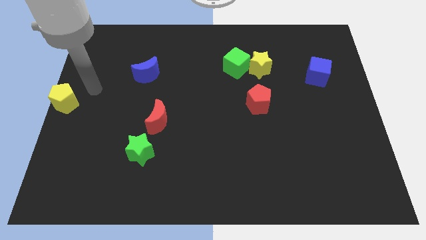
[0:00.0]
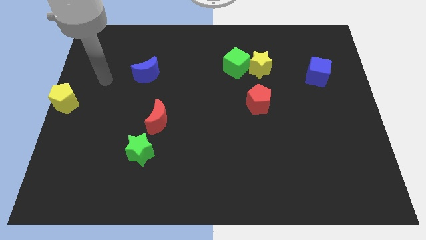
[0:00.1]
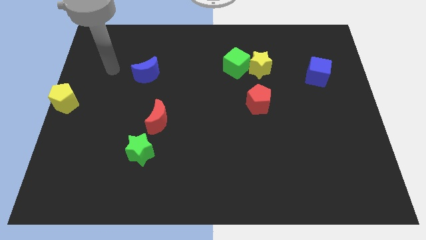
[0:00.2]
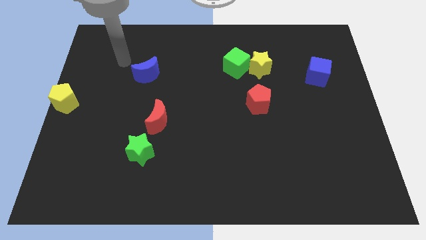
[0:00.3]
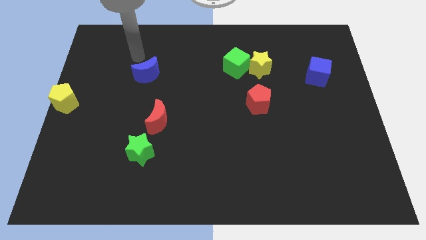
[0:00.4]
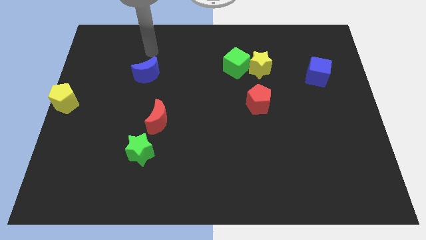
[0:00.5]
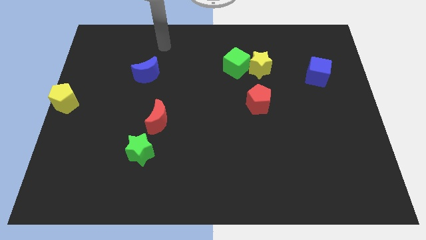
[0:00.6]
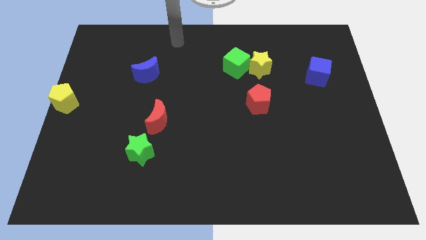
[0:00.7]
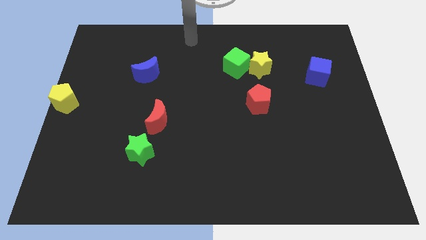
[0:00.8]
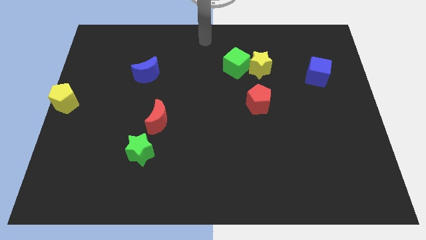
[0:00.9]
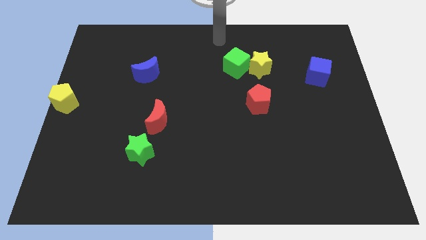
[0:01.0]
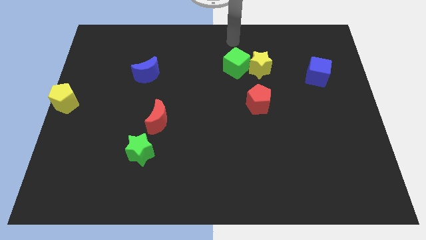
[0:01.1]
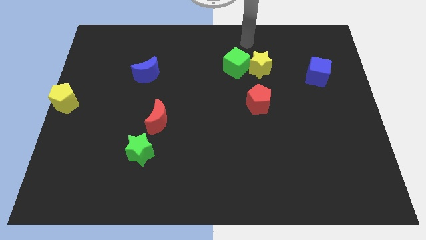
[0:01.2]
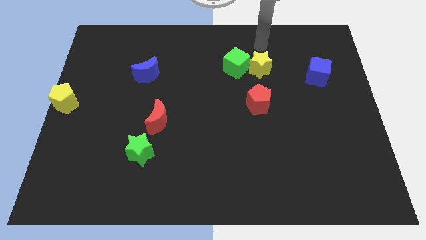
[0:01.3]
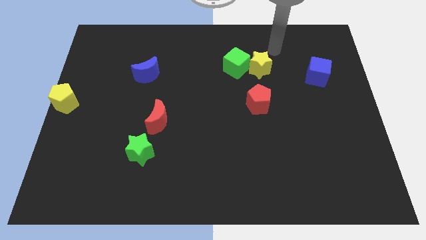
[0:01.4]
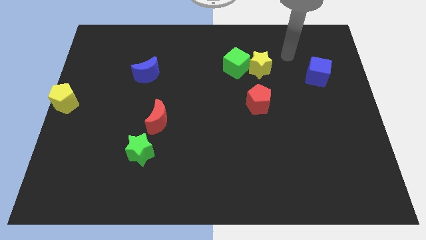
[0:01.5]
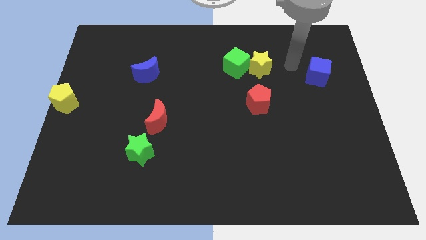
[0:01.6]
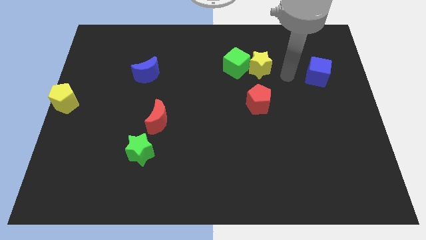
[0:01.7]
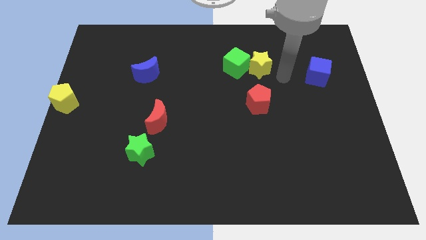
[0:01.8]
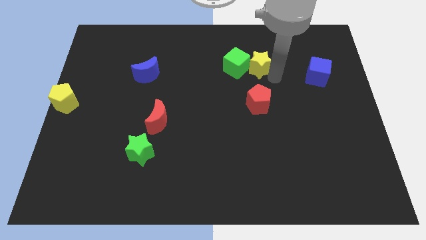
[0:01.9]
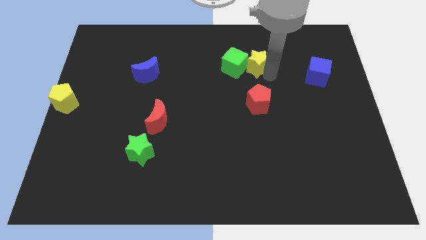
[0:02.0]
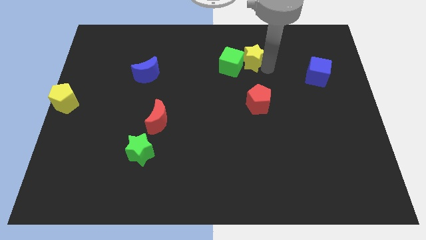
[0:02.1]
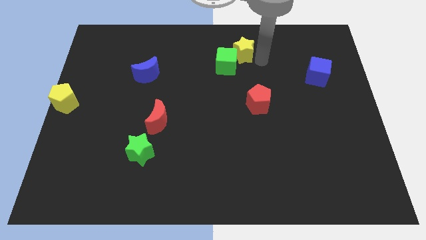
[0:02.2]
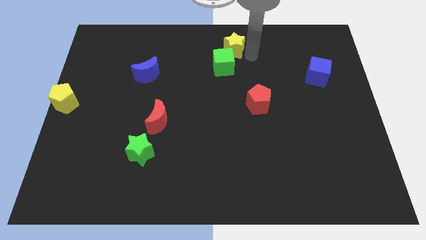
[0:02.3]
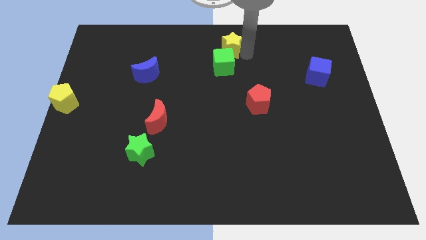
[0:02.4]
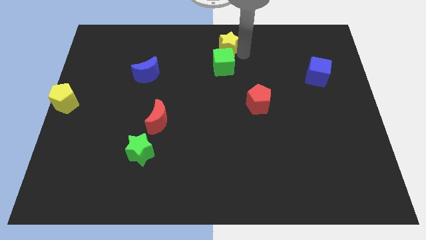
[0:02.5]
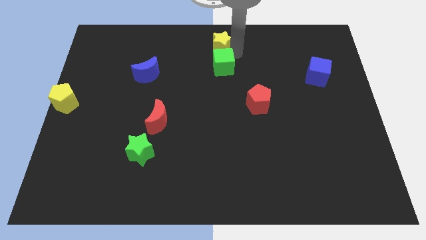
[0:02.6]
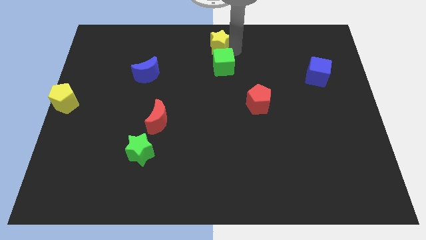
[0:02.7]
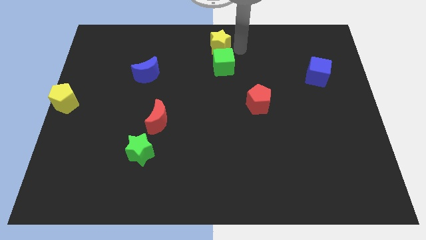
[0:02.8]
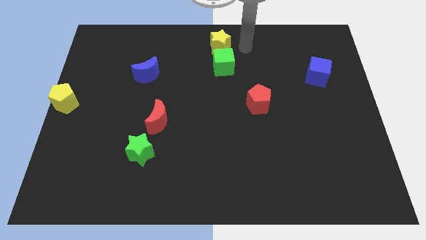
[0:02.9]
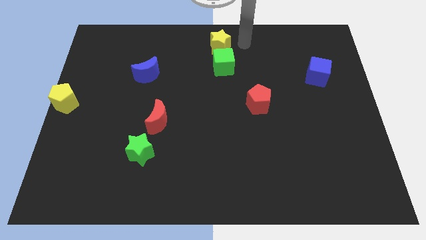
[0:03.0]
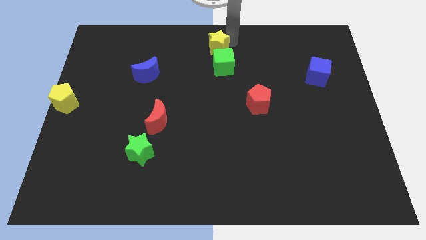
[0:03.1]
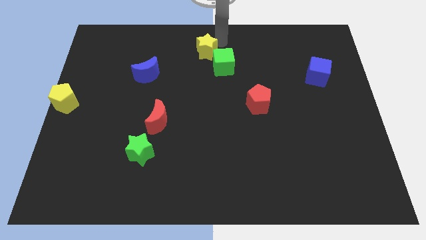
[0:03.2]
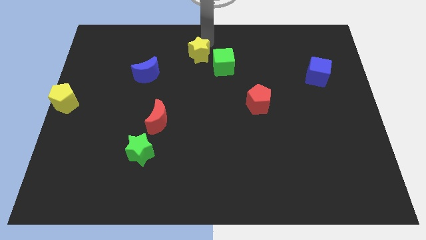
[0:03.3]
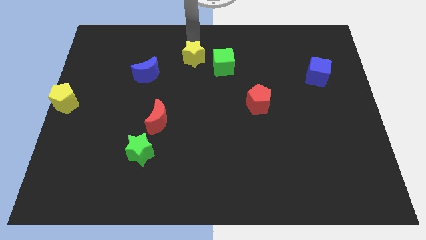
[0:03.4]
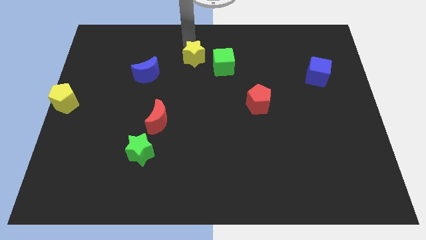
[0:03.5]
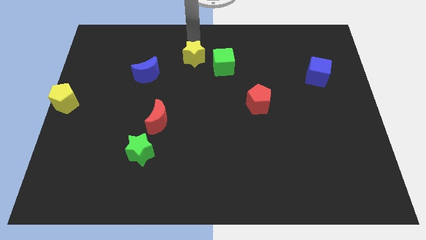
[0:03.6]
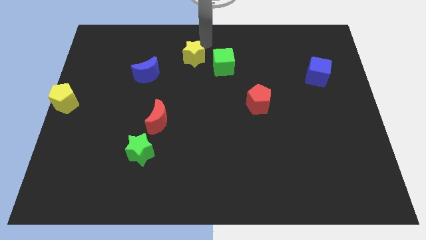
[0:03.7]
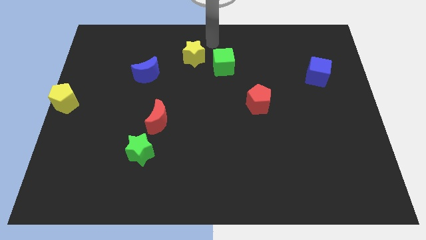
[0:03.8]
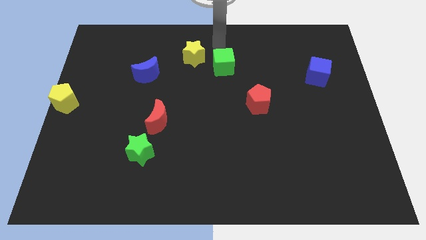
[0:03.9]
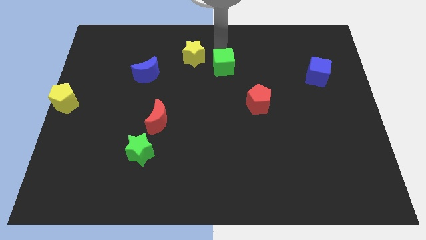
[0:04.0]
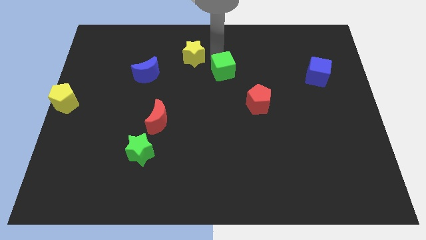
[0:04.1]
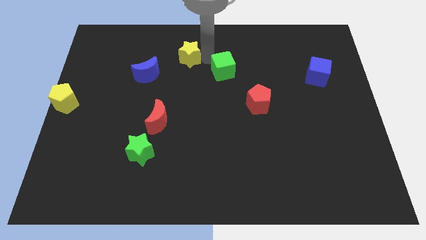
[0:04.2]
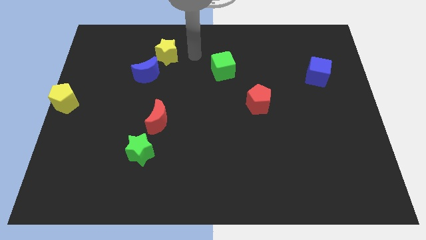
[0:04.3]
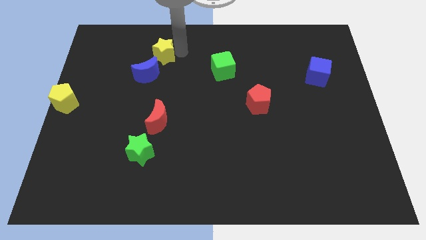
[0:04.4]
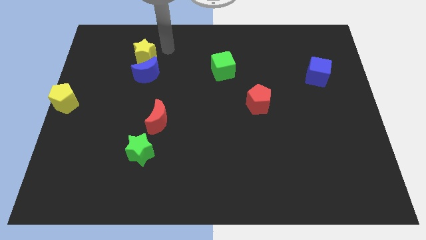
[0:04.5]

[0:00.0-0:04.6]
bring the yellow star at the top side of the blue crescent

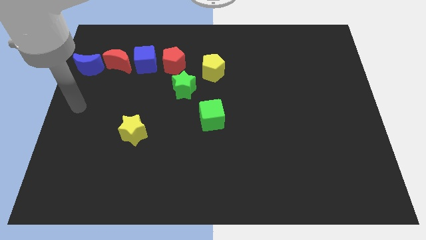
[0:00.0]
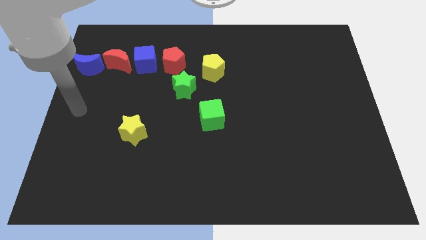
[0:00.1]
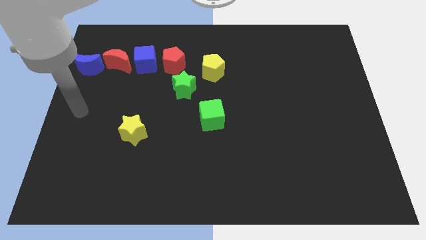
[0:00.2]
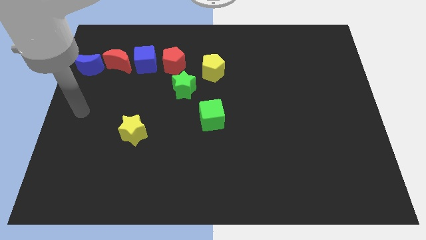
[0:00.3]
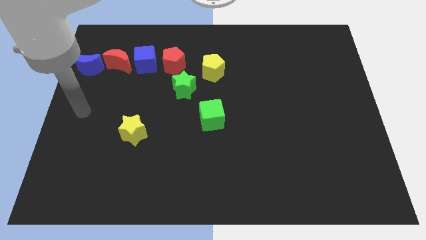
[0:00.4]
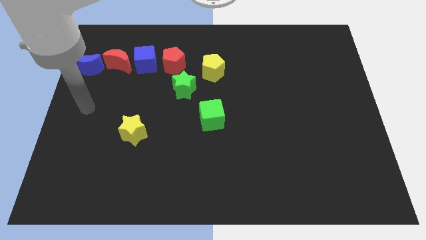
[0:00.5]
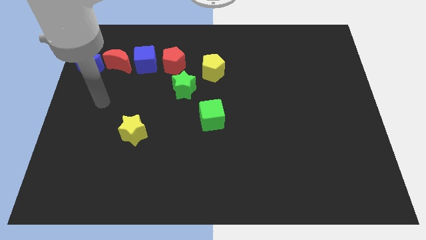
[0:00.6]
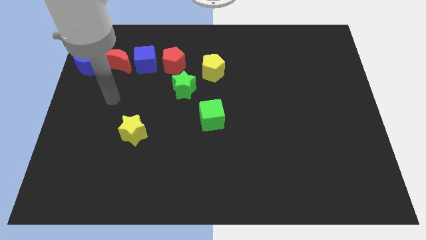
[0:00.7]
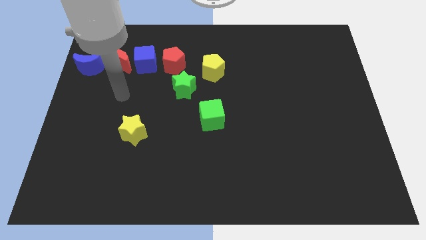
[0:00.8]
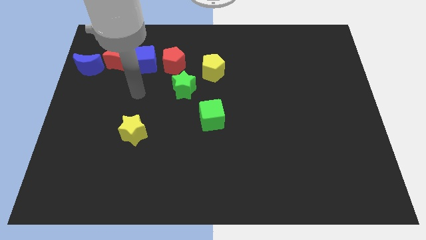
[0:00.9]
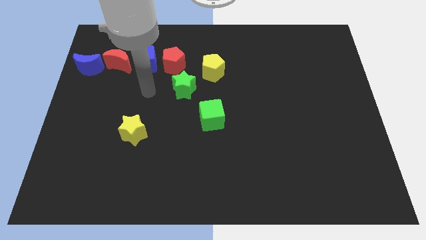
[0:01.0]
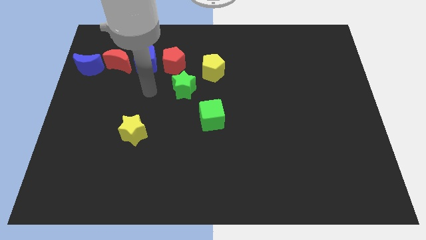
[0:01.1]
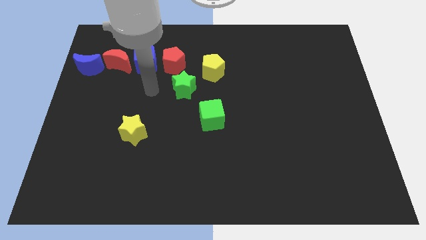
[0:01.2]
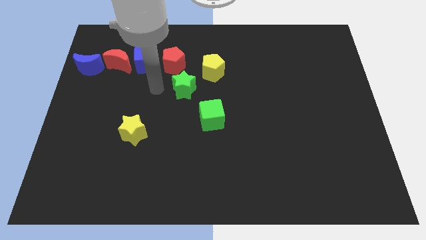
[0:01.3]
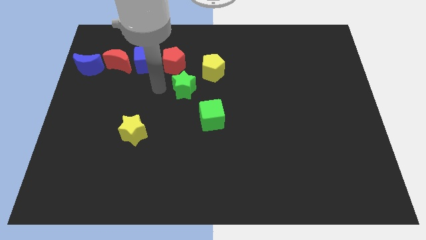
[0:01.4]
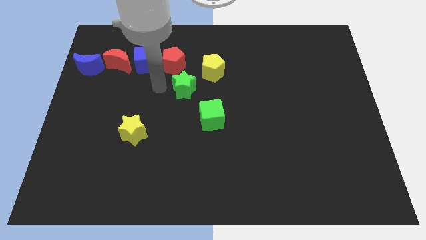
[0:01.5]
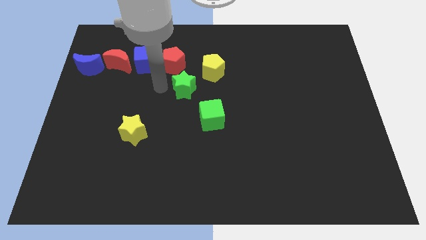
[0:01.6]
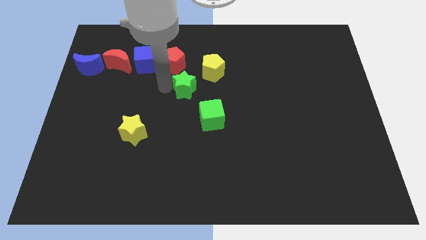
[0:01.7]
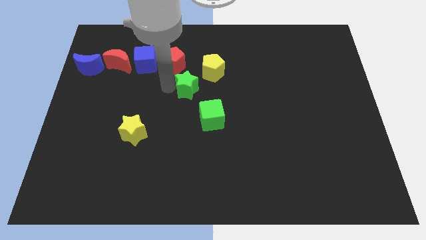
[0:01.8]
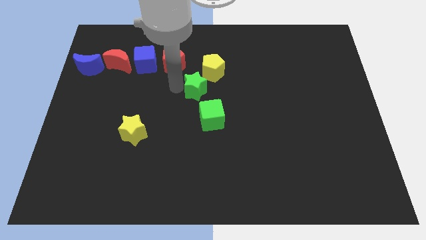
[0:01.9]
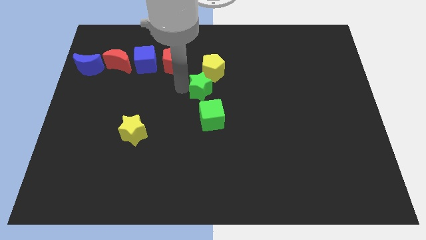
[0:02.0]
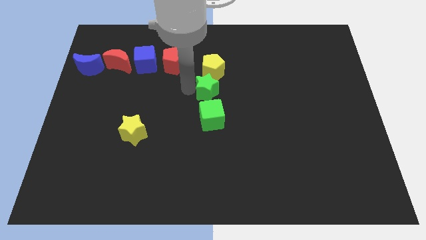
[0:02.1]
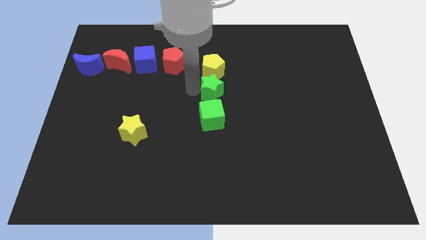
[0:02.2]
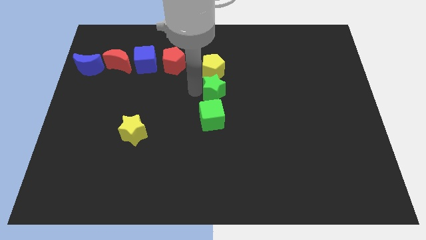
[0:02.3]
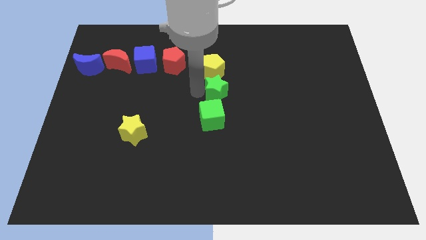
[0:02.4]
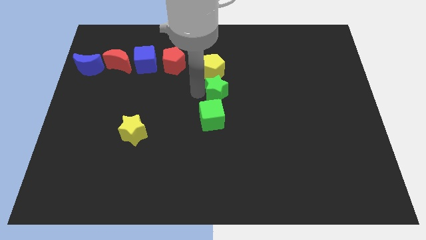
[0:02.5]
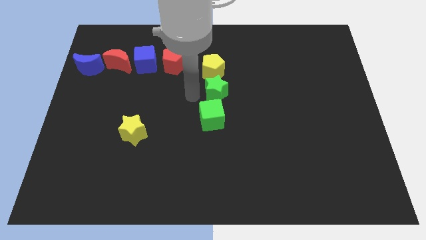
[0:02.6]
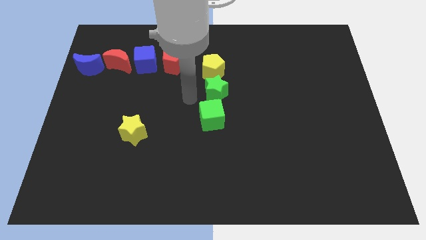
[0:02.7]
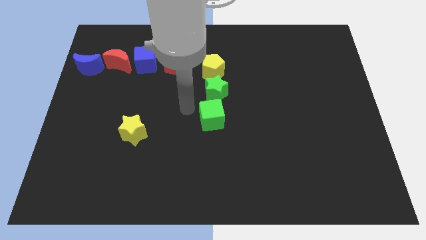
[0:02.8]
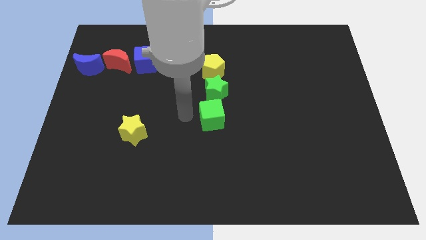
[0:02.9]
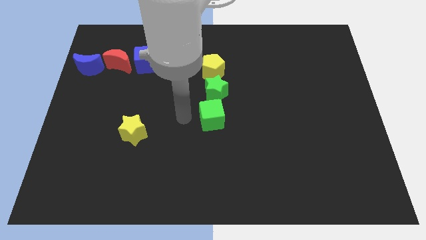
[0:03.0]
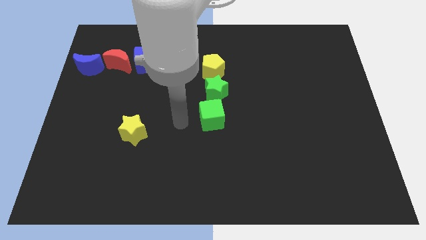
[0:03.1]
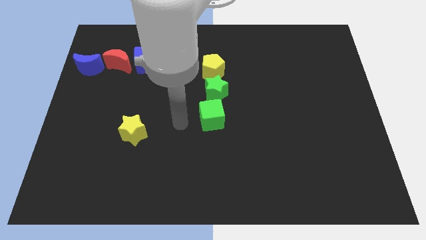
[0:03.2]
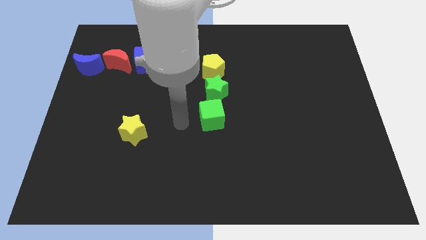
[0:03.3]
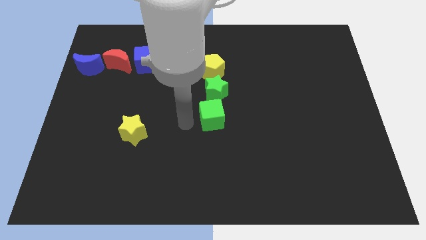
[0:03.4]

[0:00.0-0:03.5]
place the green star between the yellow pentagon and green cube

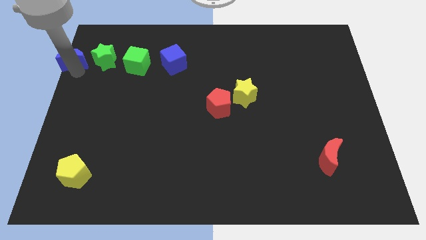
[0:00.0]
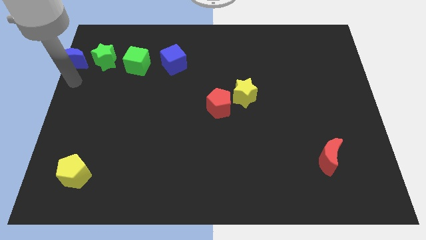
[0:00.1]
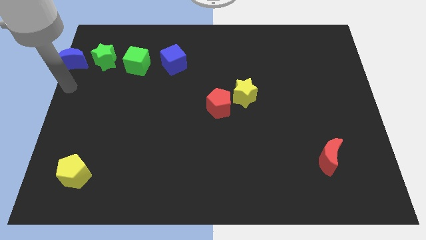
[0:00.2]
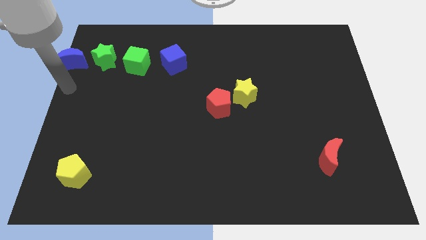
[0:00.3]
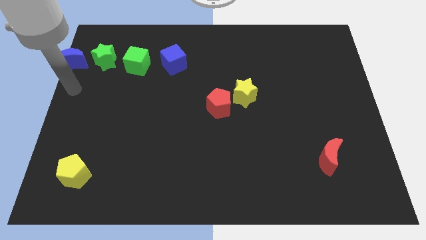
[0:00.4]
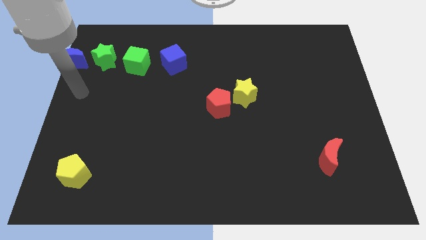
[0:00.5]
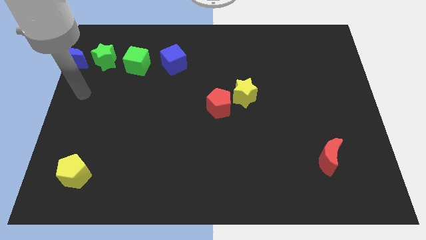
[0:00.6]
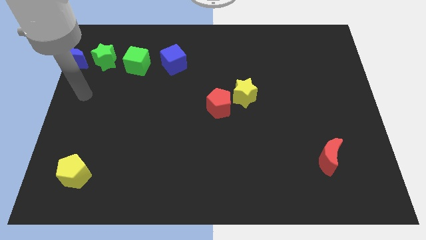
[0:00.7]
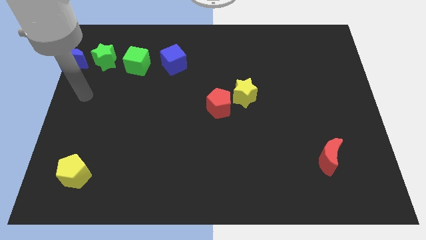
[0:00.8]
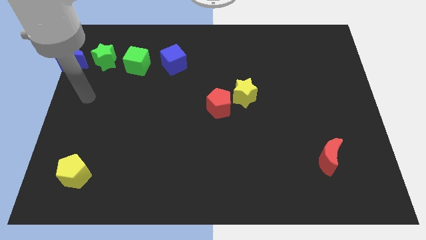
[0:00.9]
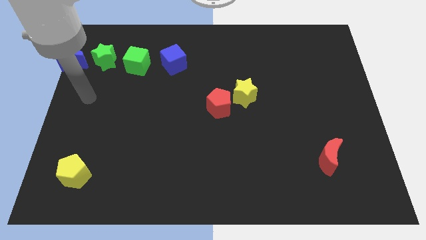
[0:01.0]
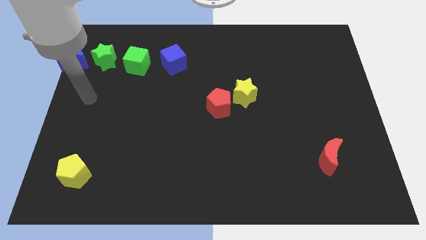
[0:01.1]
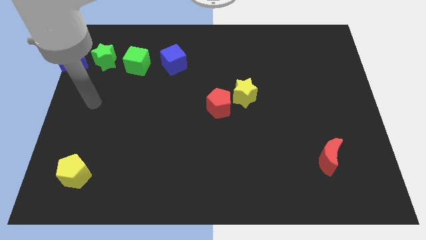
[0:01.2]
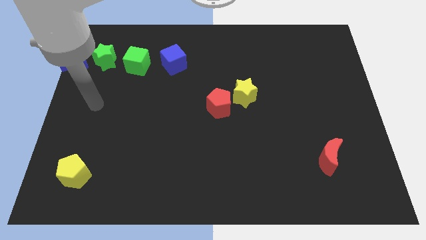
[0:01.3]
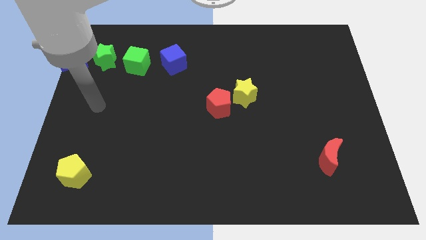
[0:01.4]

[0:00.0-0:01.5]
move your arm away from blue moon
